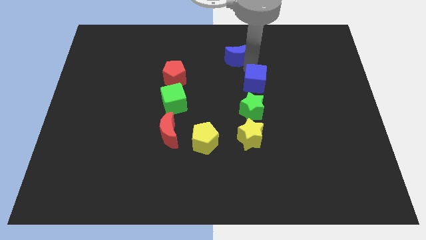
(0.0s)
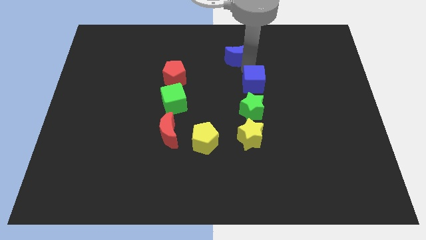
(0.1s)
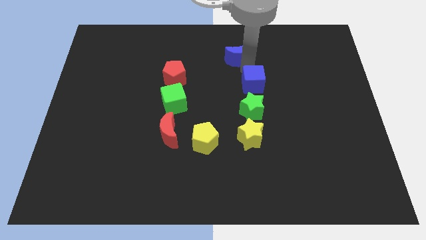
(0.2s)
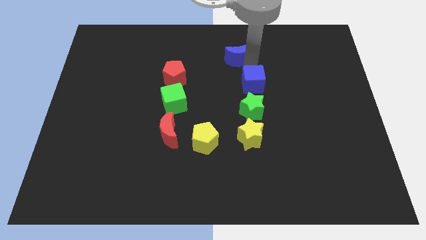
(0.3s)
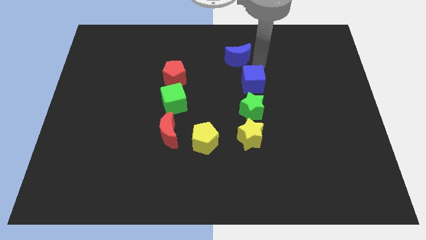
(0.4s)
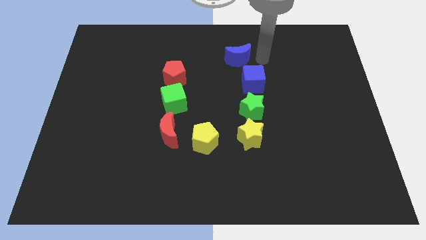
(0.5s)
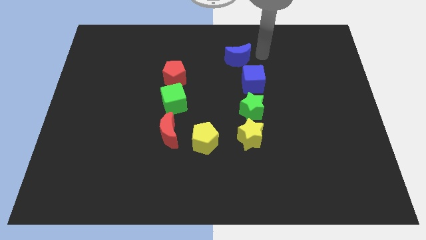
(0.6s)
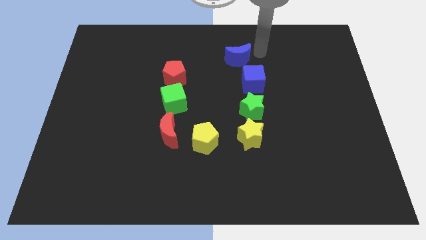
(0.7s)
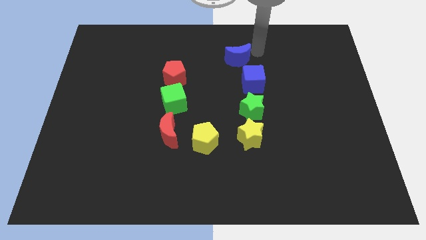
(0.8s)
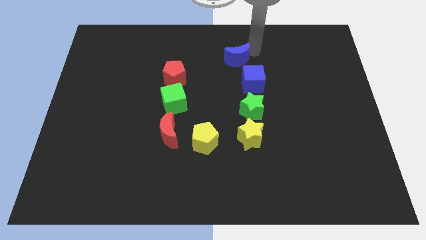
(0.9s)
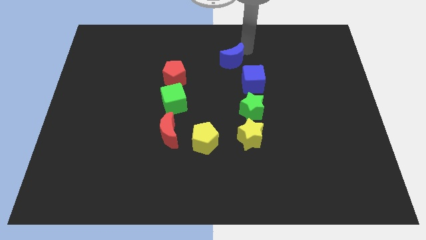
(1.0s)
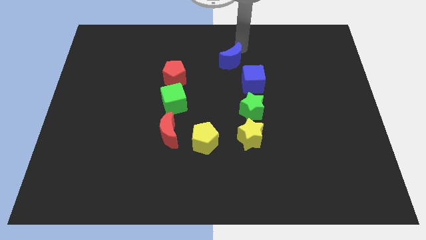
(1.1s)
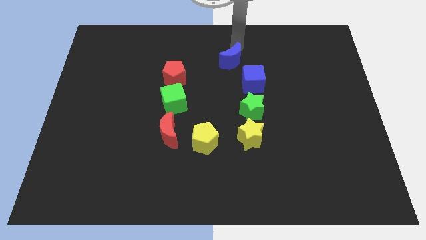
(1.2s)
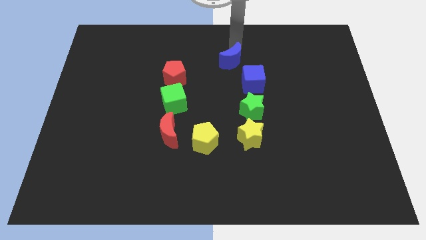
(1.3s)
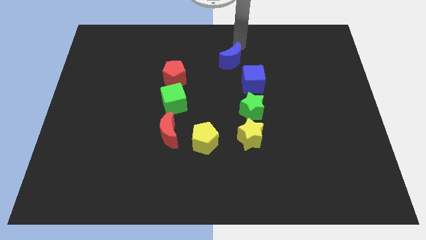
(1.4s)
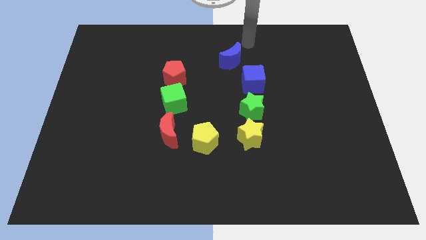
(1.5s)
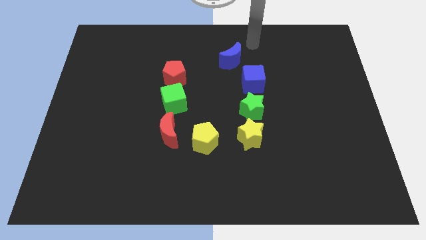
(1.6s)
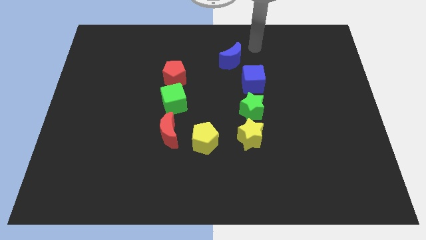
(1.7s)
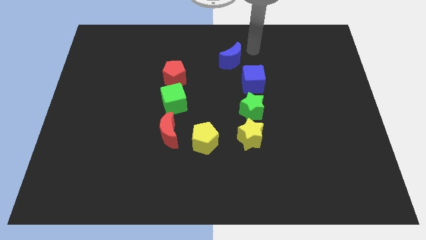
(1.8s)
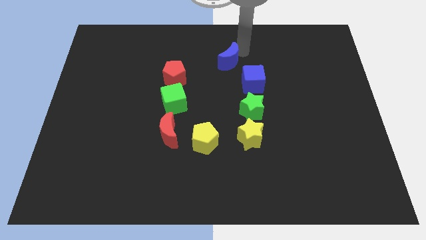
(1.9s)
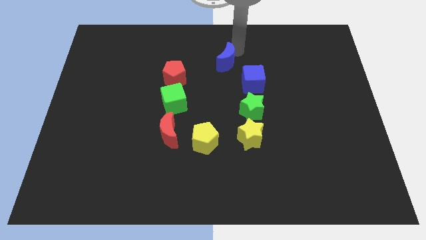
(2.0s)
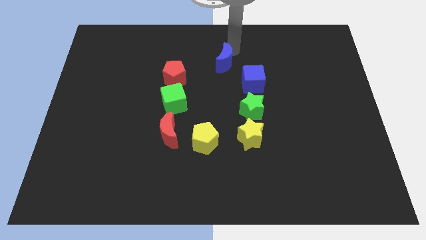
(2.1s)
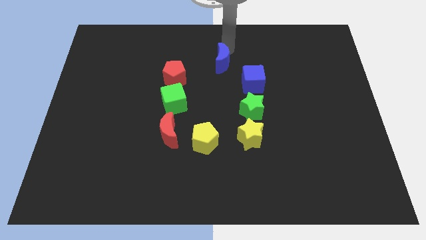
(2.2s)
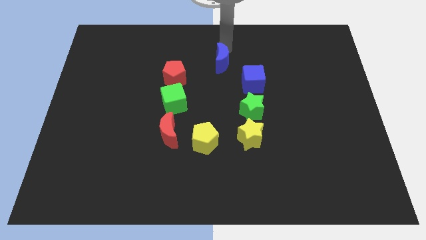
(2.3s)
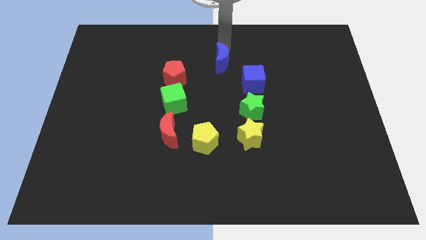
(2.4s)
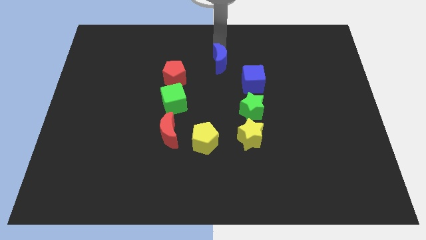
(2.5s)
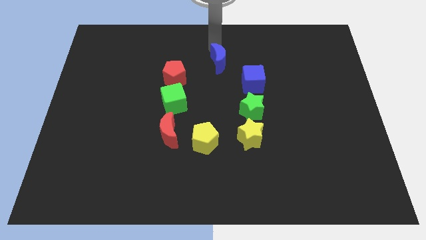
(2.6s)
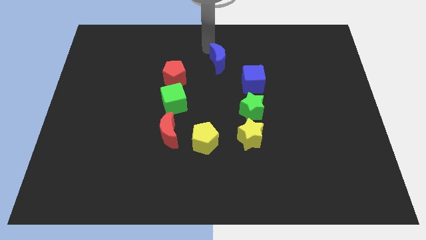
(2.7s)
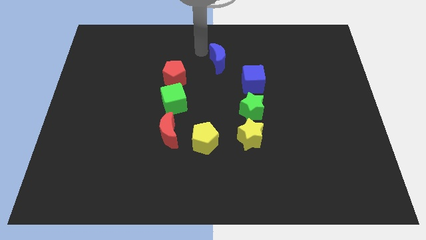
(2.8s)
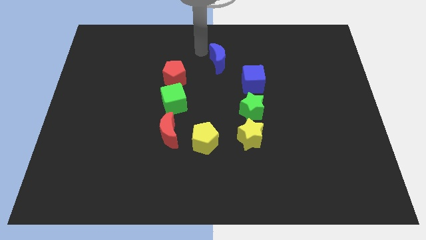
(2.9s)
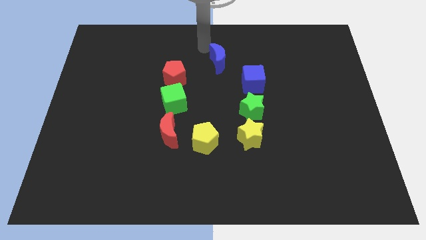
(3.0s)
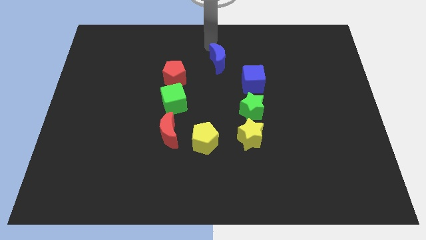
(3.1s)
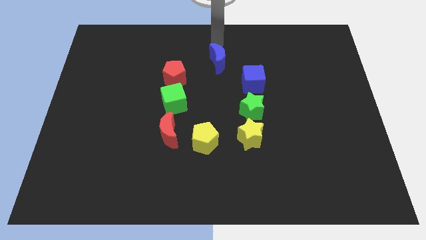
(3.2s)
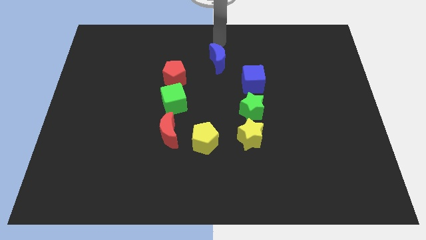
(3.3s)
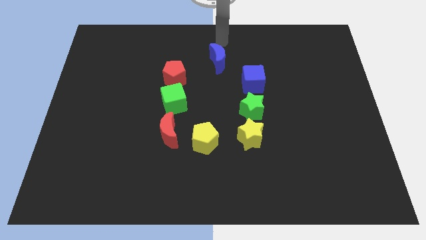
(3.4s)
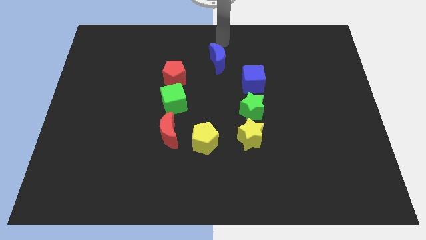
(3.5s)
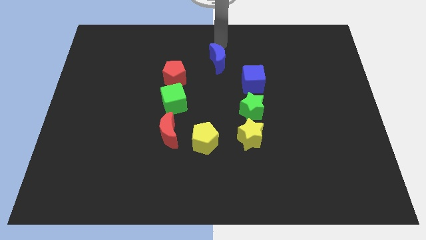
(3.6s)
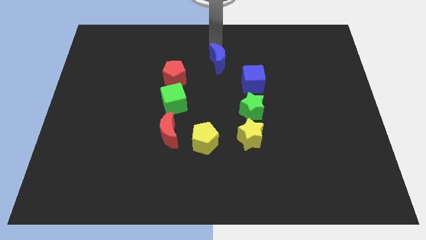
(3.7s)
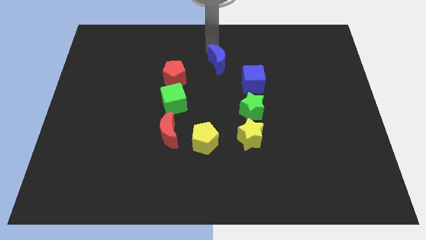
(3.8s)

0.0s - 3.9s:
push the blue moon towards the top center

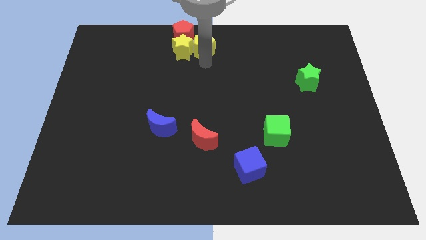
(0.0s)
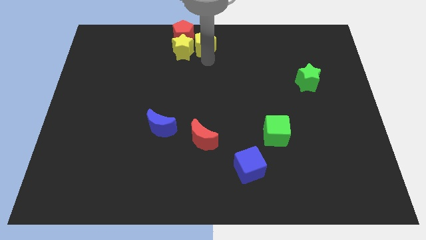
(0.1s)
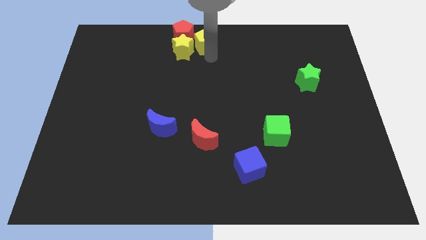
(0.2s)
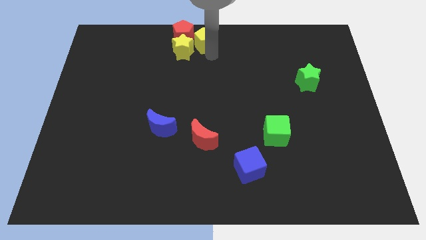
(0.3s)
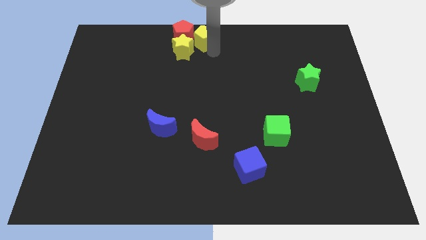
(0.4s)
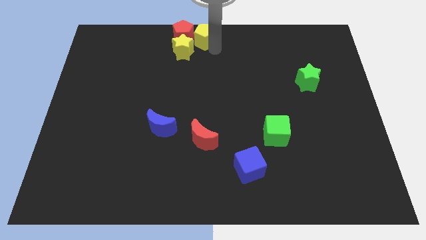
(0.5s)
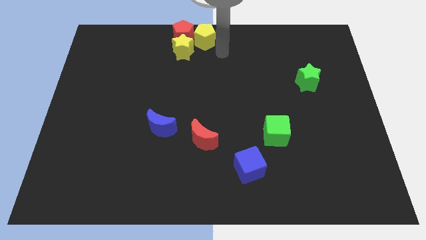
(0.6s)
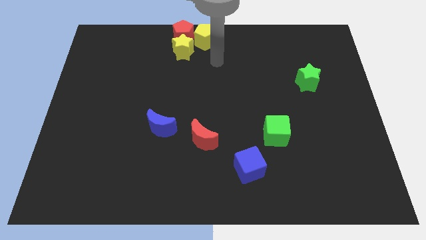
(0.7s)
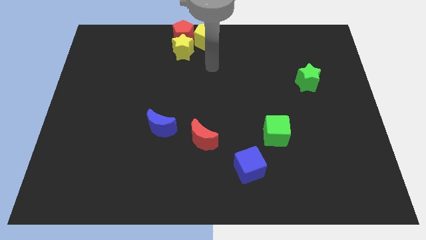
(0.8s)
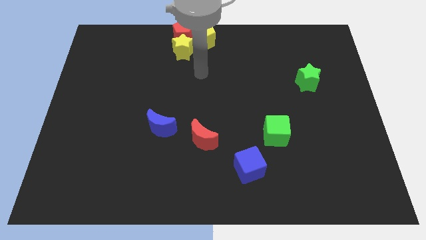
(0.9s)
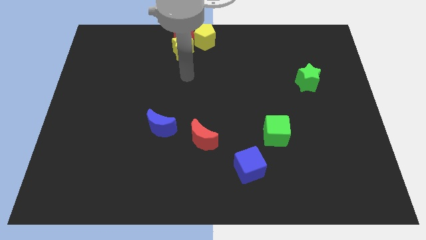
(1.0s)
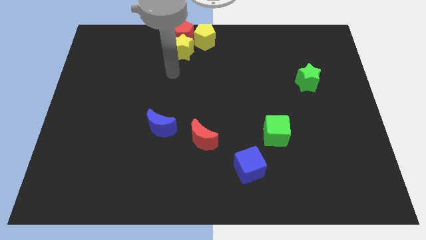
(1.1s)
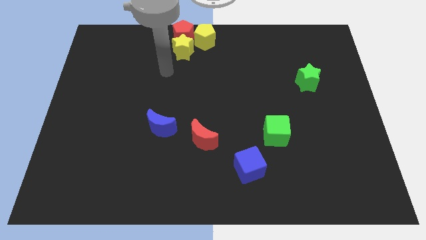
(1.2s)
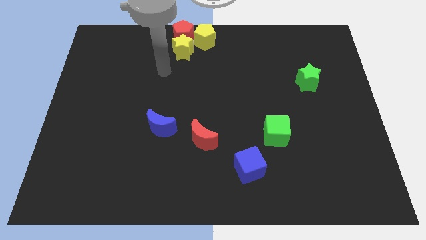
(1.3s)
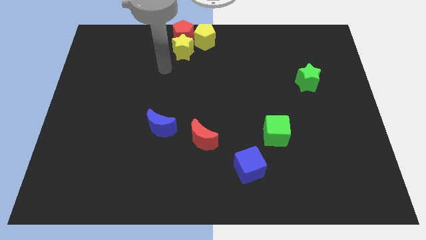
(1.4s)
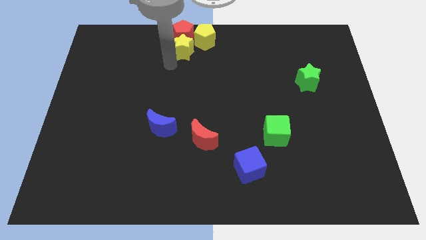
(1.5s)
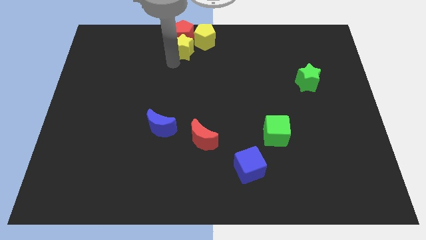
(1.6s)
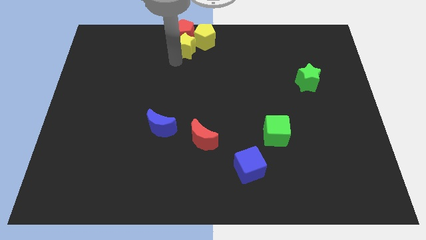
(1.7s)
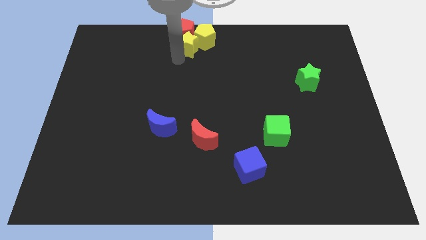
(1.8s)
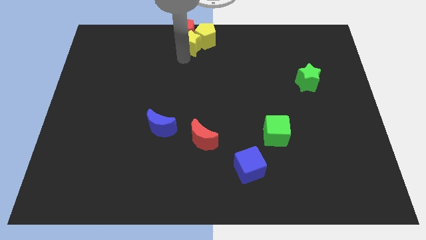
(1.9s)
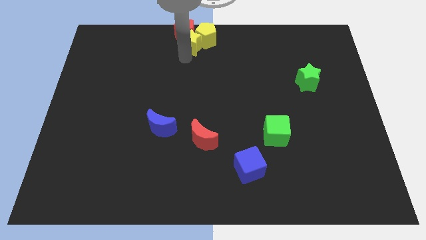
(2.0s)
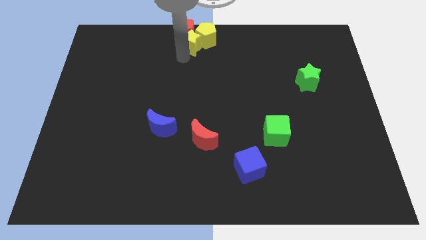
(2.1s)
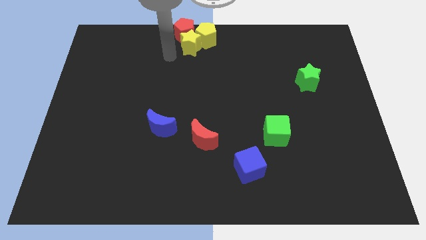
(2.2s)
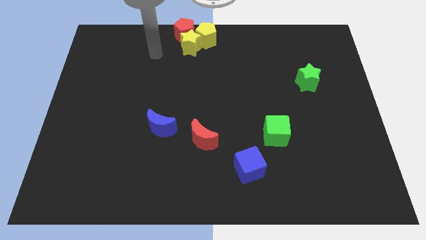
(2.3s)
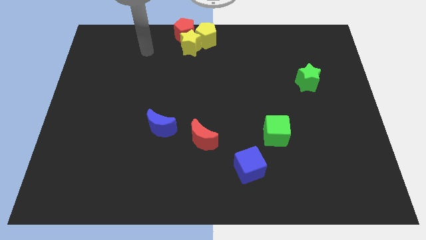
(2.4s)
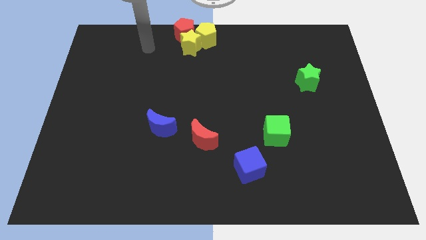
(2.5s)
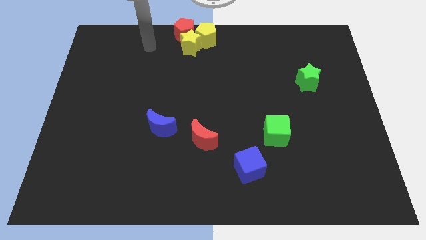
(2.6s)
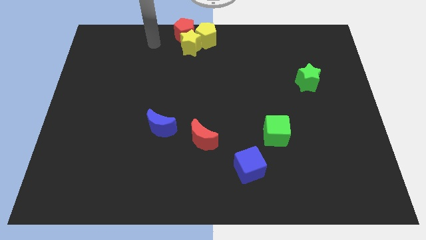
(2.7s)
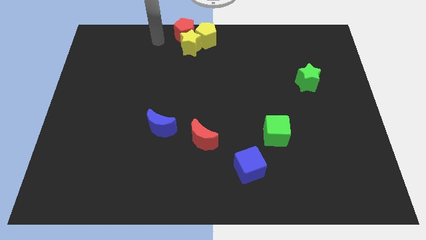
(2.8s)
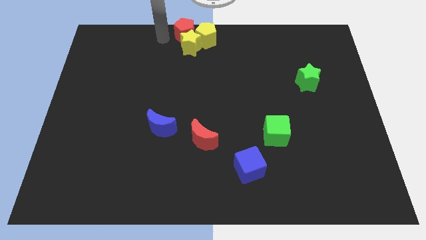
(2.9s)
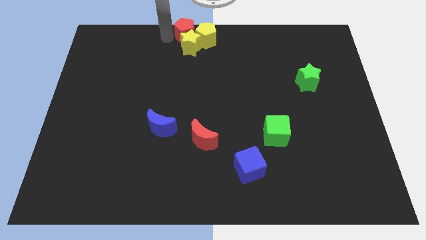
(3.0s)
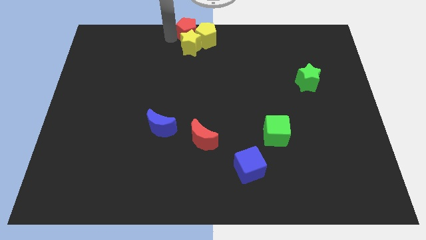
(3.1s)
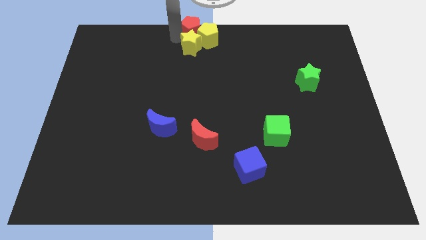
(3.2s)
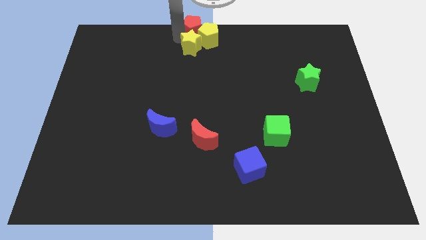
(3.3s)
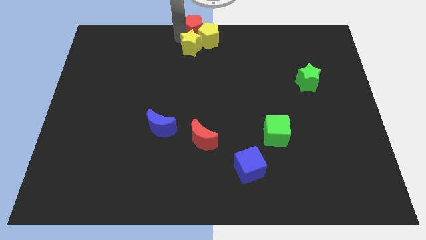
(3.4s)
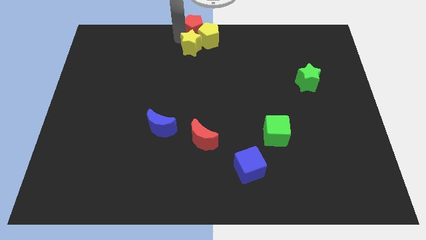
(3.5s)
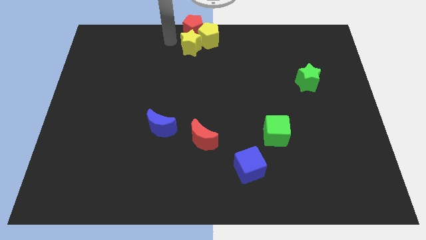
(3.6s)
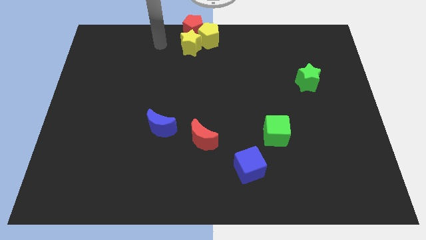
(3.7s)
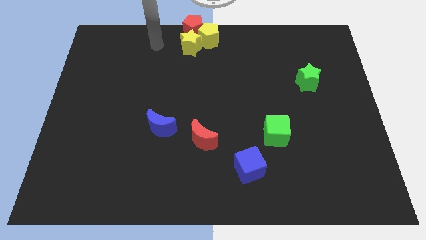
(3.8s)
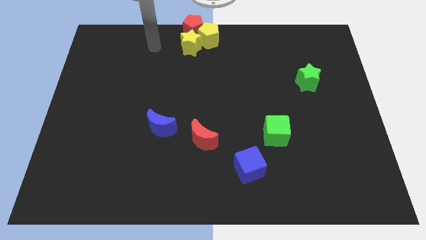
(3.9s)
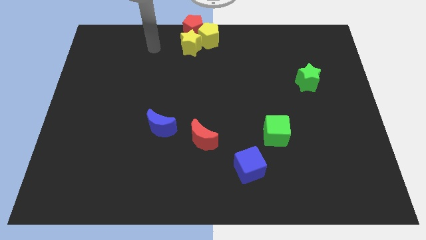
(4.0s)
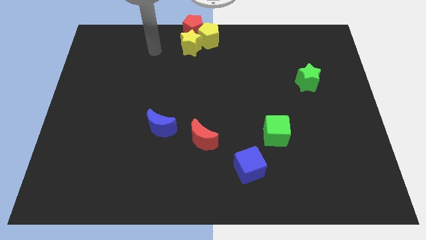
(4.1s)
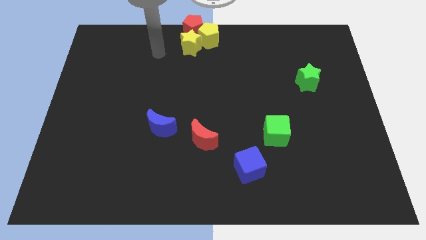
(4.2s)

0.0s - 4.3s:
adjust the yellow blocks and the red pentagon at the top center

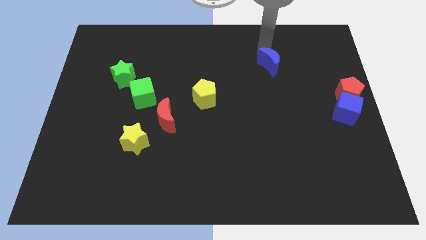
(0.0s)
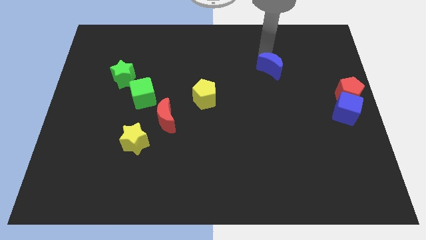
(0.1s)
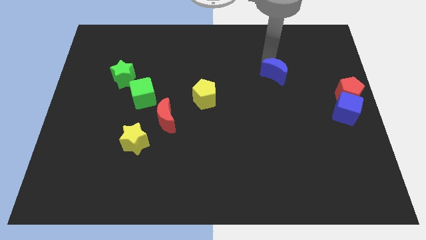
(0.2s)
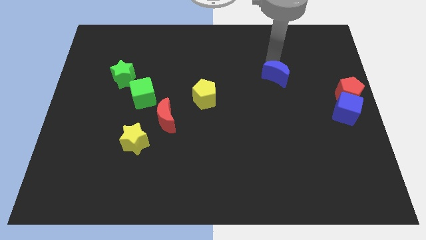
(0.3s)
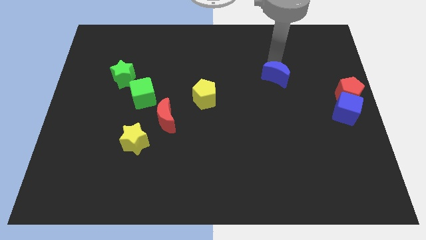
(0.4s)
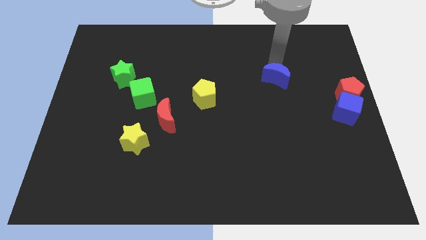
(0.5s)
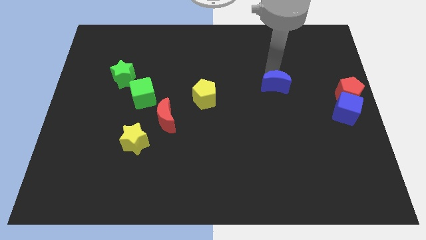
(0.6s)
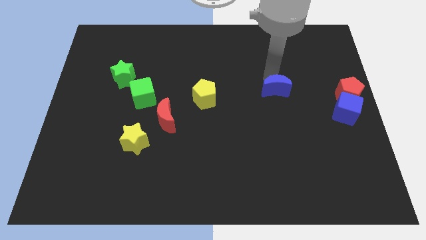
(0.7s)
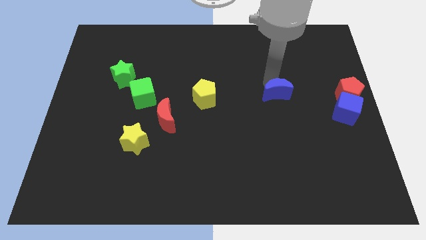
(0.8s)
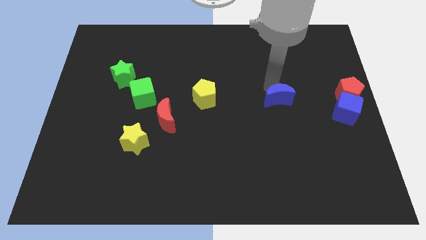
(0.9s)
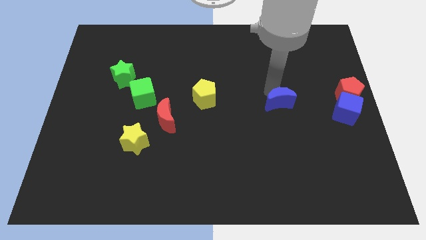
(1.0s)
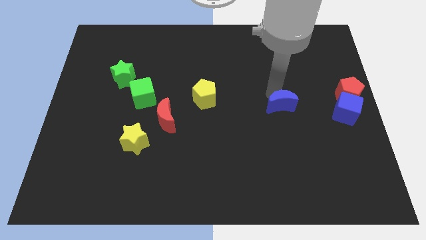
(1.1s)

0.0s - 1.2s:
slide the blue crescent slightly towards down
